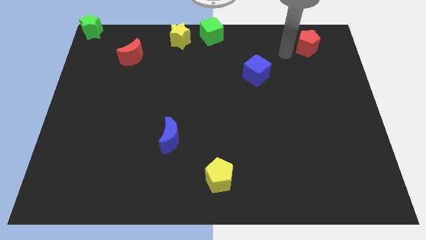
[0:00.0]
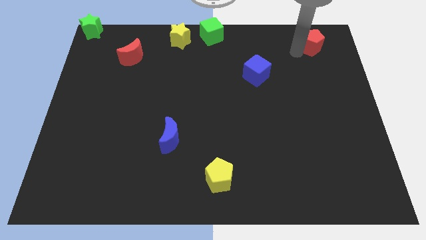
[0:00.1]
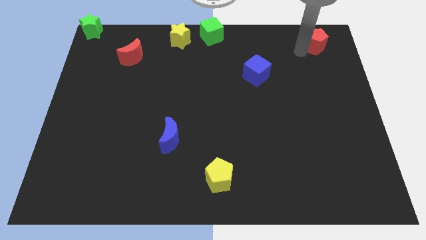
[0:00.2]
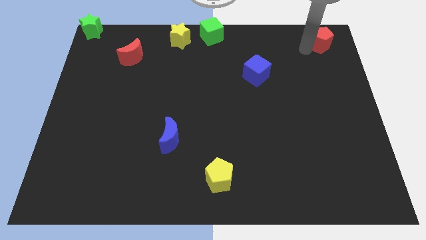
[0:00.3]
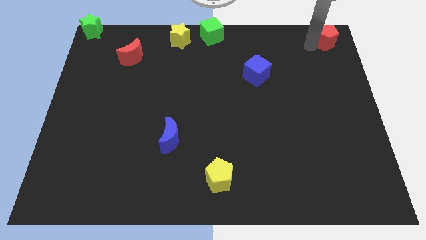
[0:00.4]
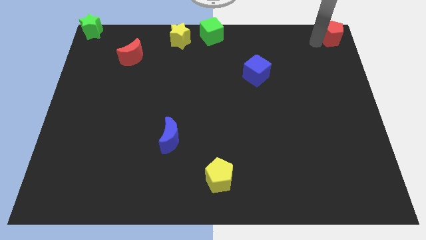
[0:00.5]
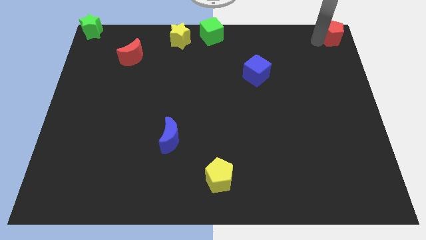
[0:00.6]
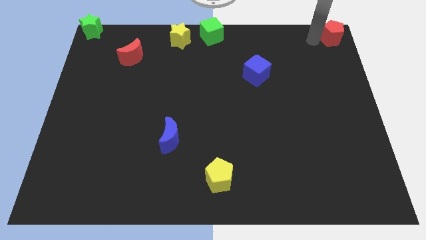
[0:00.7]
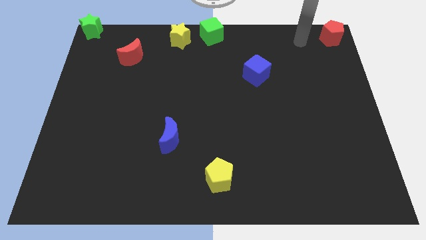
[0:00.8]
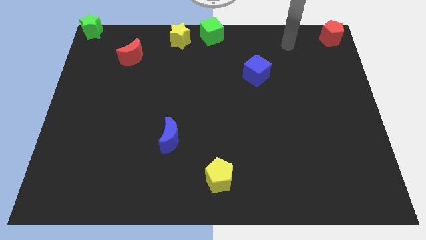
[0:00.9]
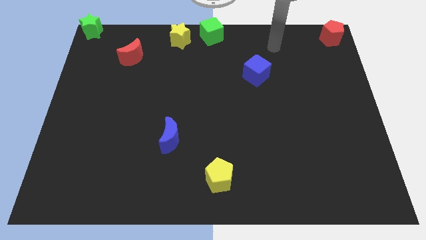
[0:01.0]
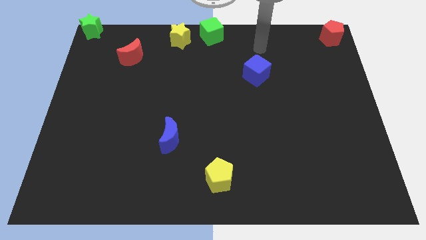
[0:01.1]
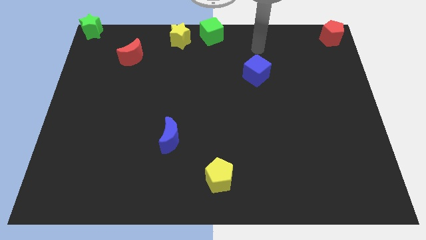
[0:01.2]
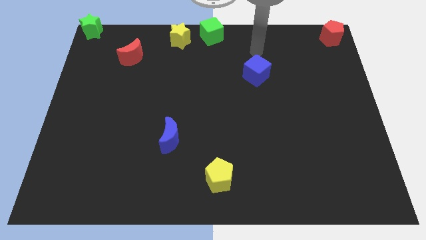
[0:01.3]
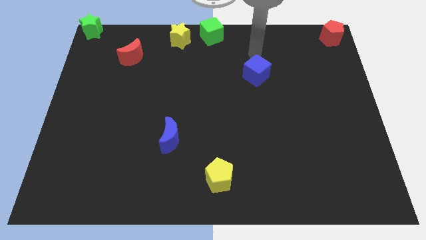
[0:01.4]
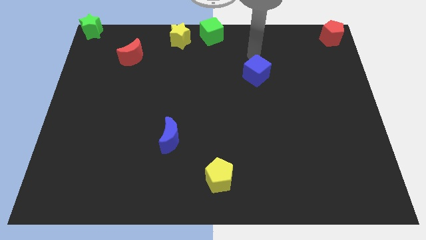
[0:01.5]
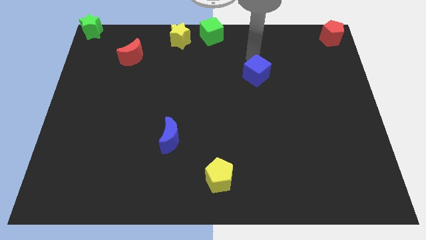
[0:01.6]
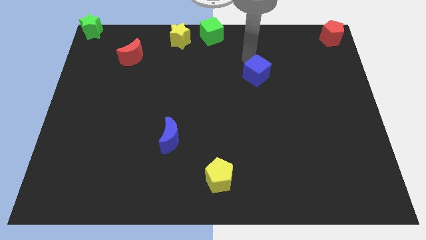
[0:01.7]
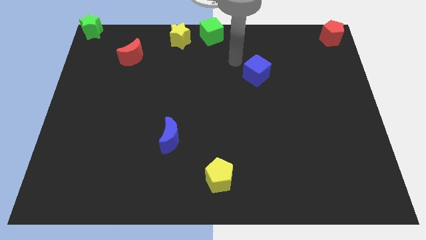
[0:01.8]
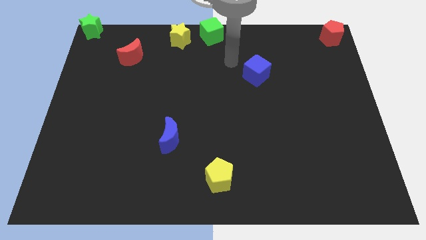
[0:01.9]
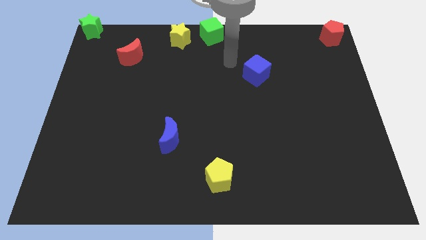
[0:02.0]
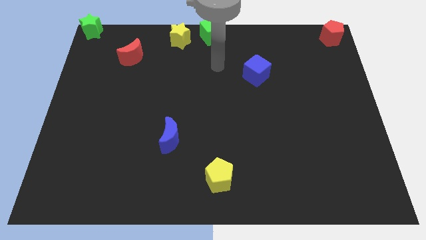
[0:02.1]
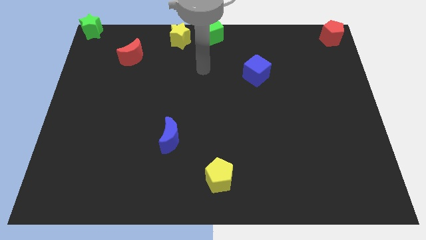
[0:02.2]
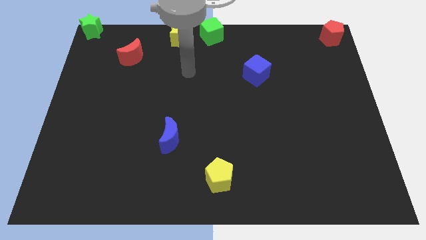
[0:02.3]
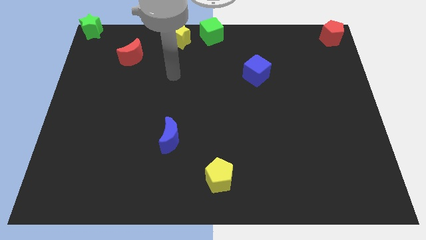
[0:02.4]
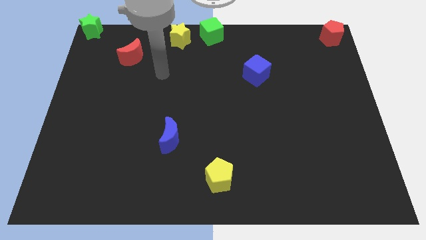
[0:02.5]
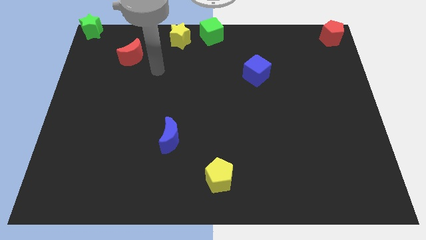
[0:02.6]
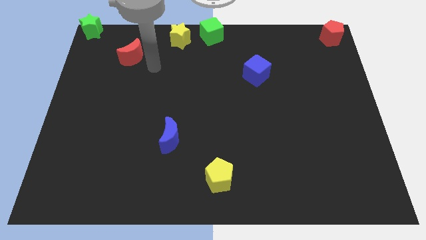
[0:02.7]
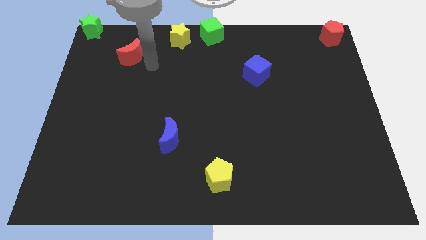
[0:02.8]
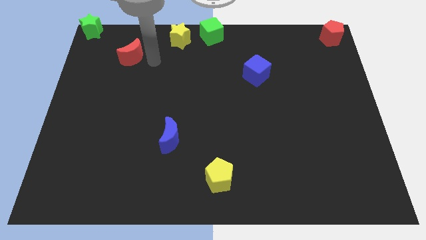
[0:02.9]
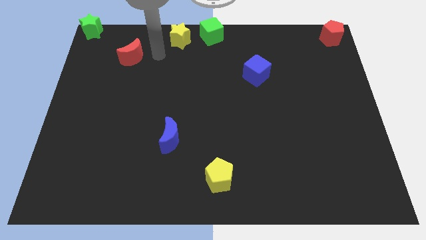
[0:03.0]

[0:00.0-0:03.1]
push the red pentagon to the top right corner of the board

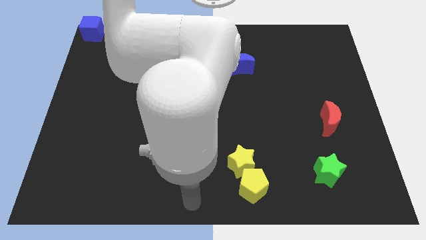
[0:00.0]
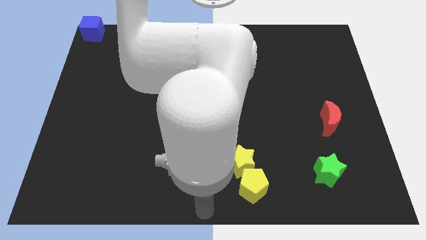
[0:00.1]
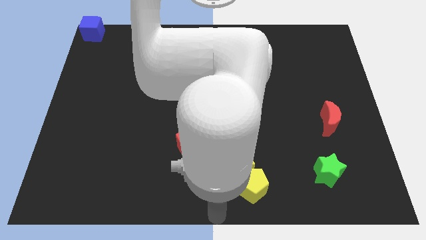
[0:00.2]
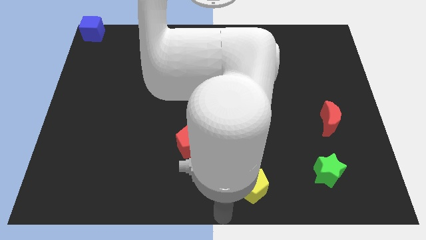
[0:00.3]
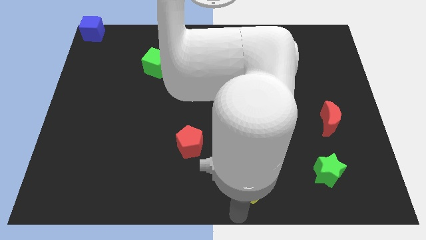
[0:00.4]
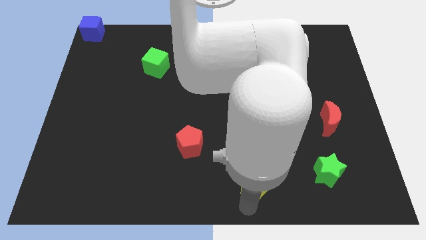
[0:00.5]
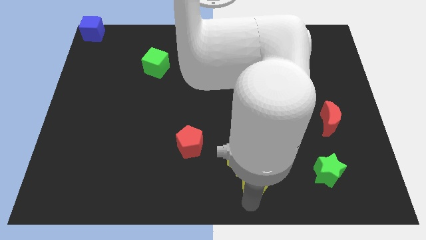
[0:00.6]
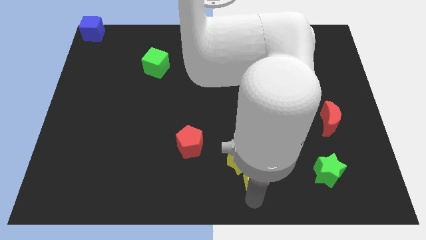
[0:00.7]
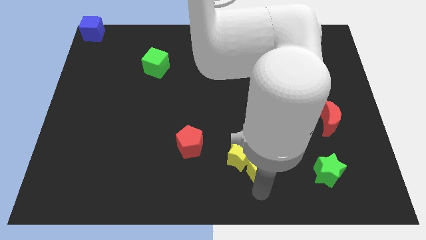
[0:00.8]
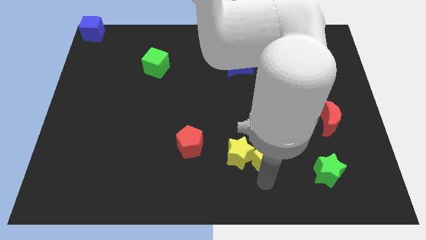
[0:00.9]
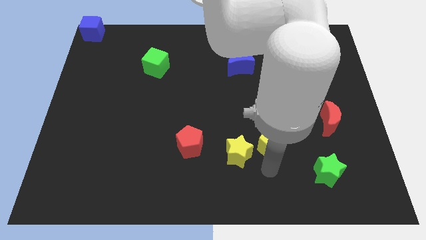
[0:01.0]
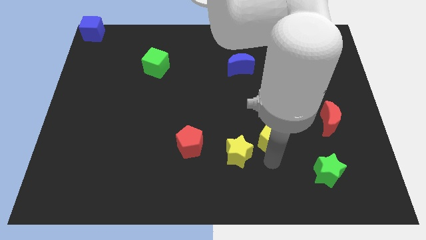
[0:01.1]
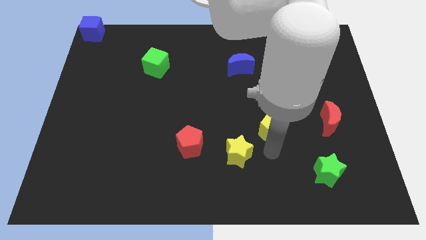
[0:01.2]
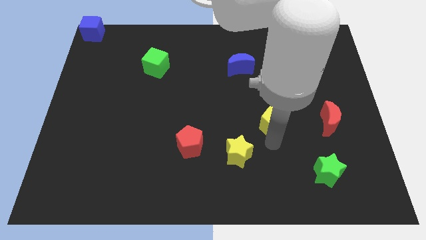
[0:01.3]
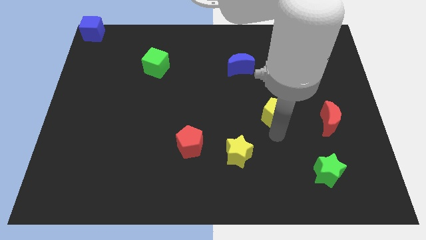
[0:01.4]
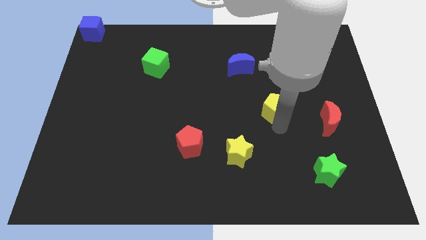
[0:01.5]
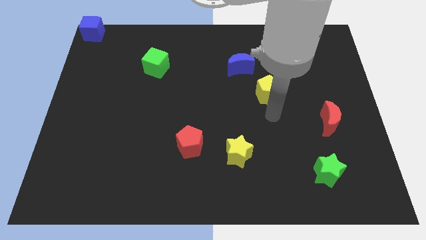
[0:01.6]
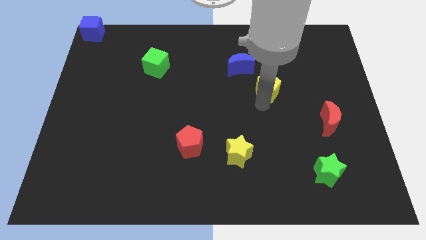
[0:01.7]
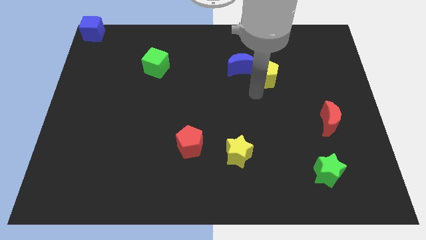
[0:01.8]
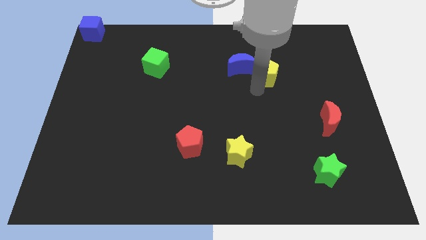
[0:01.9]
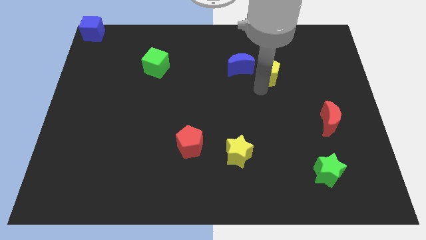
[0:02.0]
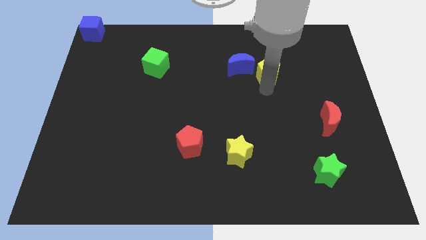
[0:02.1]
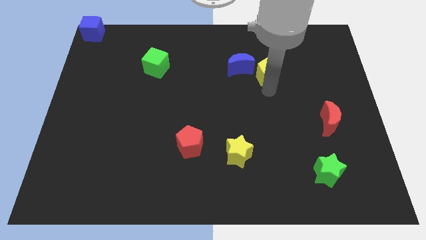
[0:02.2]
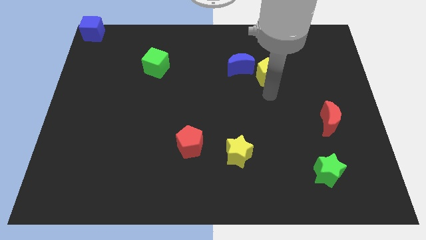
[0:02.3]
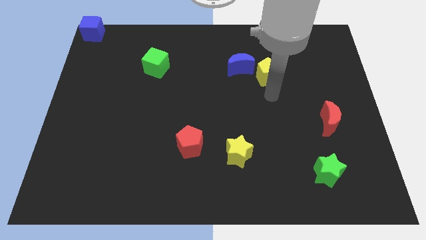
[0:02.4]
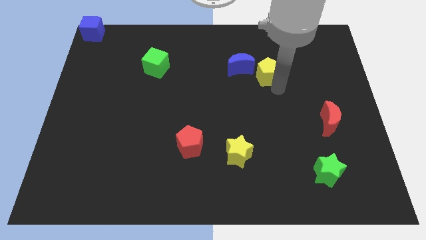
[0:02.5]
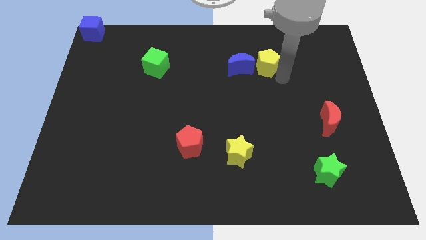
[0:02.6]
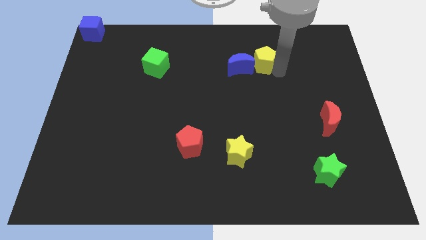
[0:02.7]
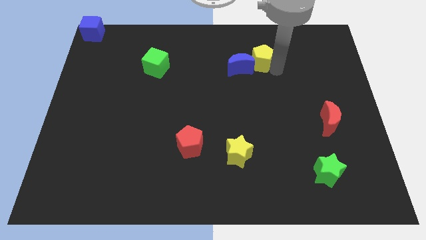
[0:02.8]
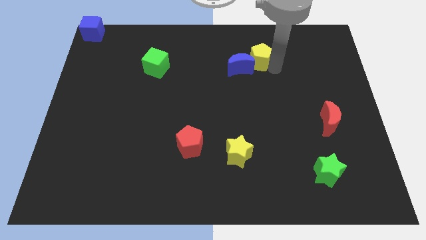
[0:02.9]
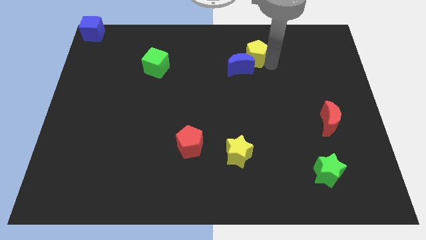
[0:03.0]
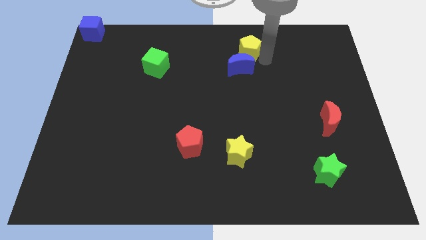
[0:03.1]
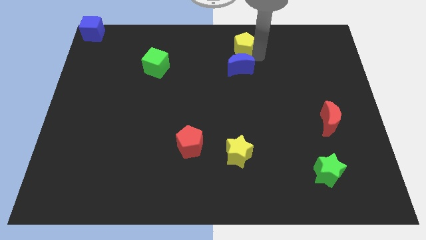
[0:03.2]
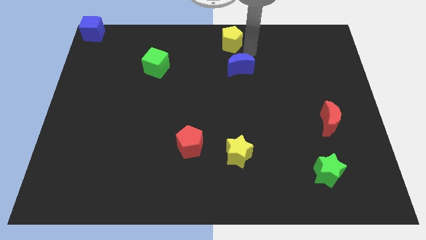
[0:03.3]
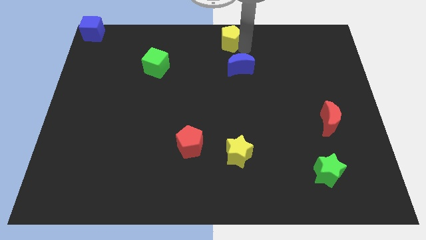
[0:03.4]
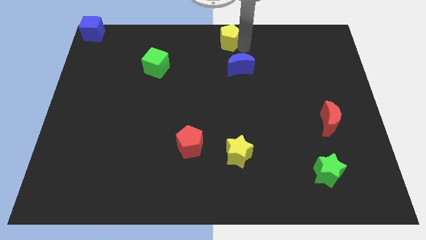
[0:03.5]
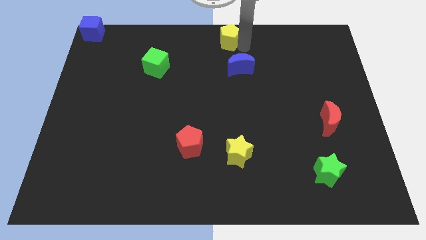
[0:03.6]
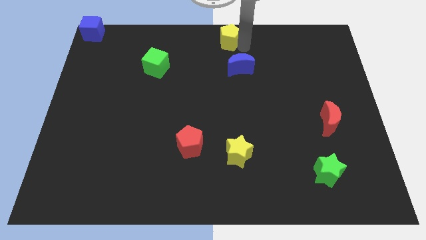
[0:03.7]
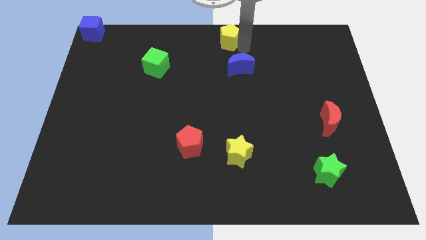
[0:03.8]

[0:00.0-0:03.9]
place the yellow pentagon above the blue moon

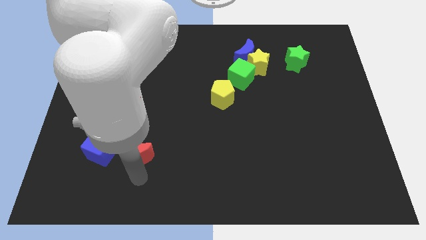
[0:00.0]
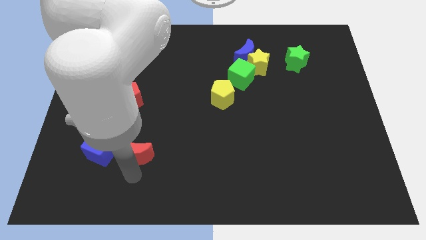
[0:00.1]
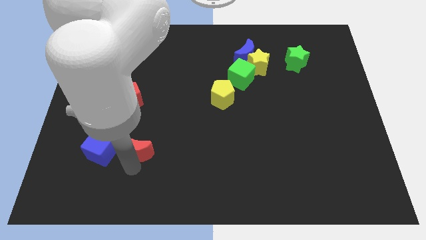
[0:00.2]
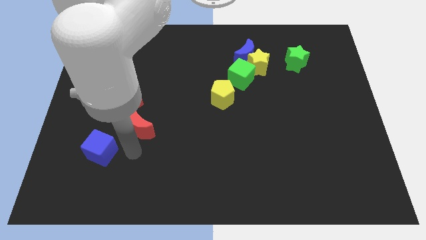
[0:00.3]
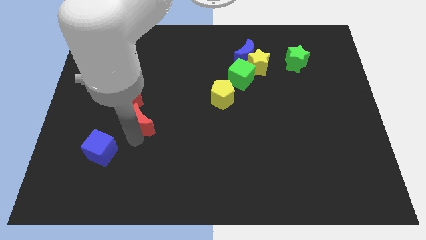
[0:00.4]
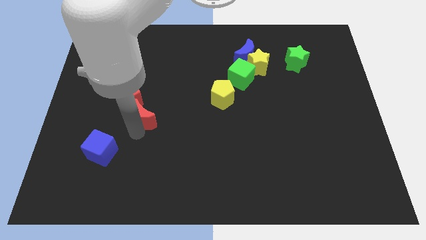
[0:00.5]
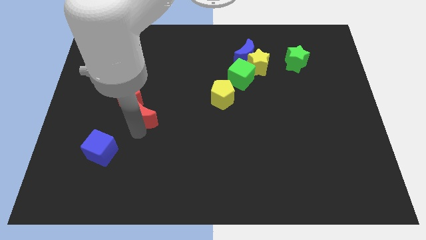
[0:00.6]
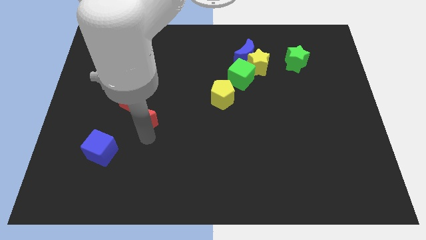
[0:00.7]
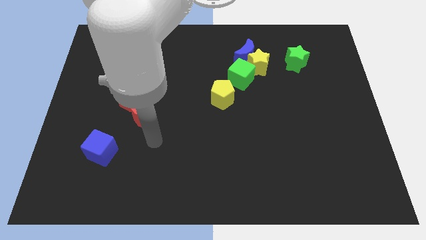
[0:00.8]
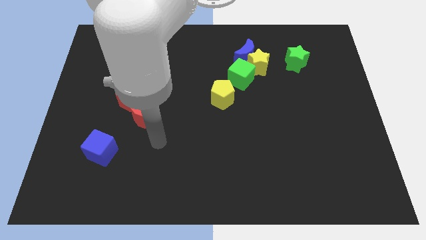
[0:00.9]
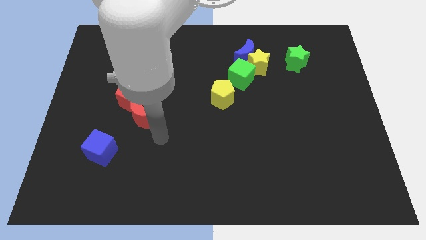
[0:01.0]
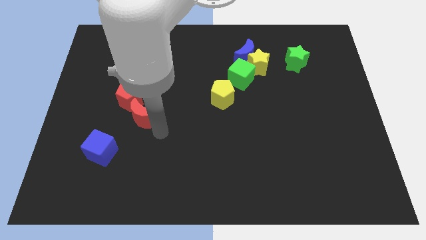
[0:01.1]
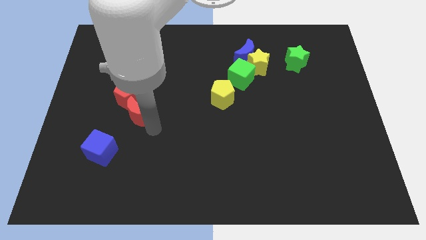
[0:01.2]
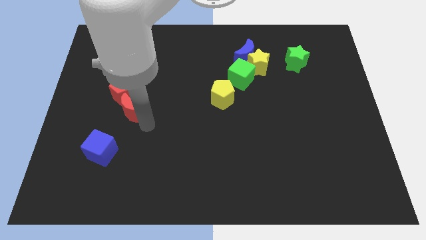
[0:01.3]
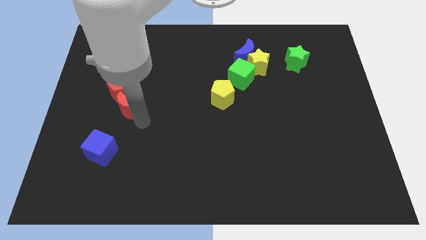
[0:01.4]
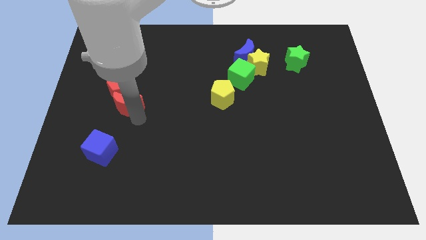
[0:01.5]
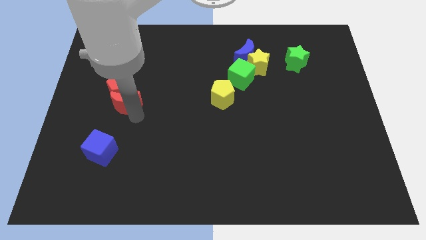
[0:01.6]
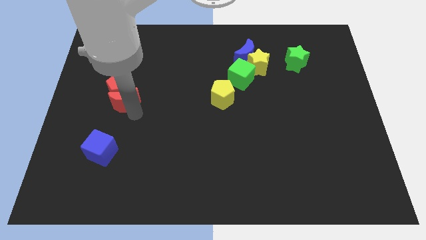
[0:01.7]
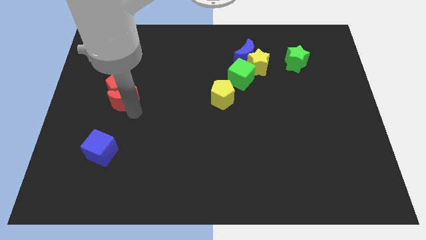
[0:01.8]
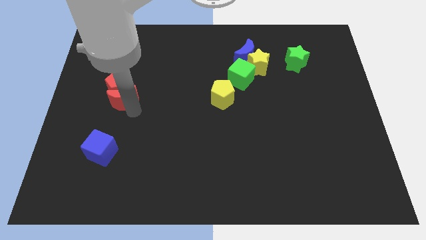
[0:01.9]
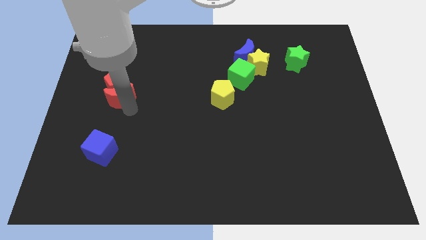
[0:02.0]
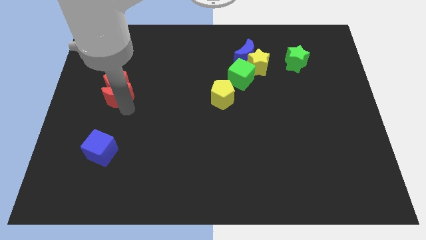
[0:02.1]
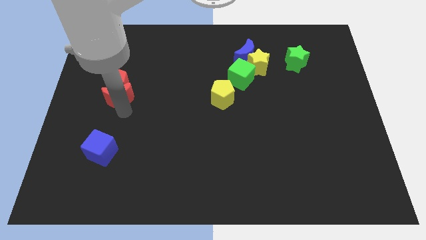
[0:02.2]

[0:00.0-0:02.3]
push red crescent into the red pentagon
